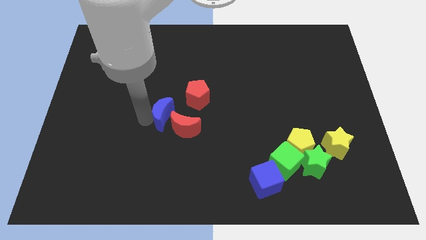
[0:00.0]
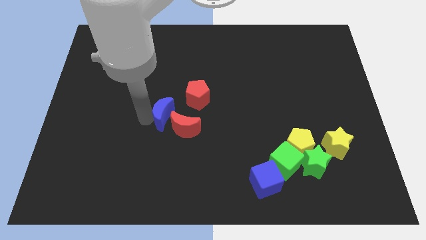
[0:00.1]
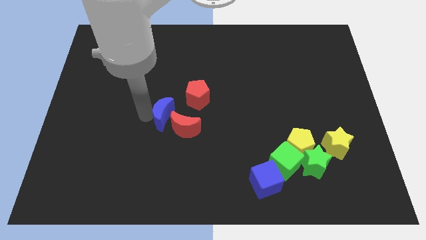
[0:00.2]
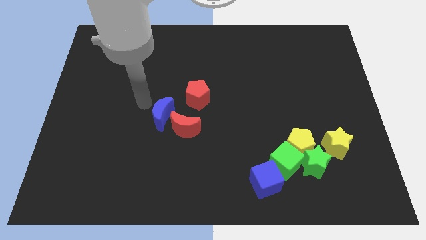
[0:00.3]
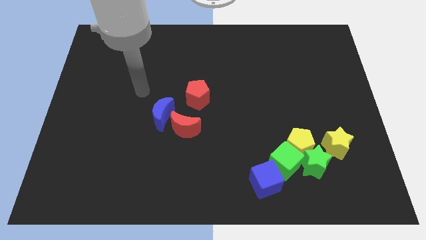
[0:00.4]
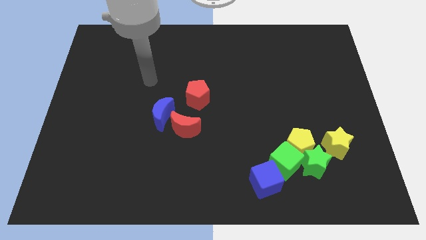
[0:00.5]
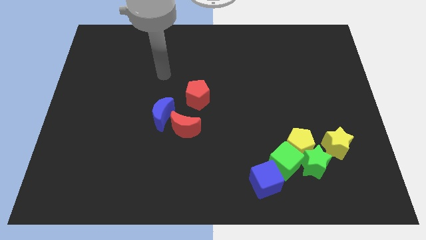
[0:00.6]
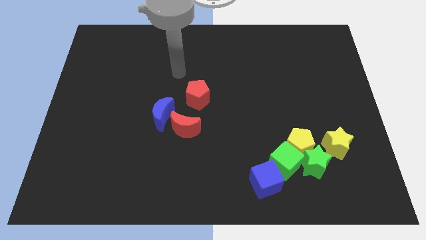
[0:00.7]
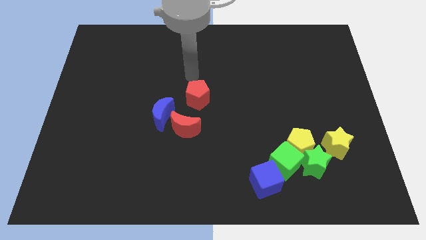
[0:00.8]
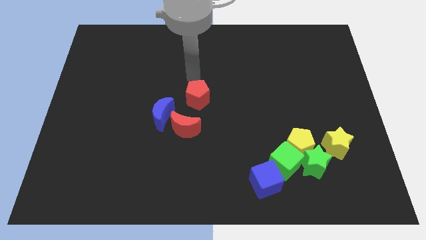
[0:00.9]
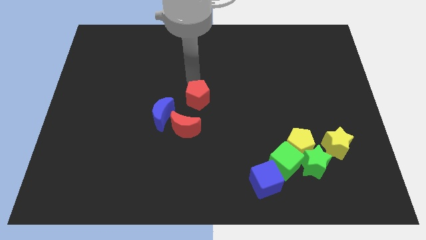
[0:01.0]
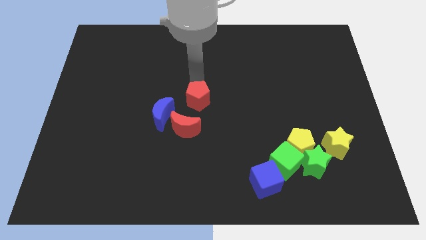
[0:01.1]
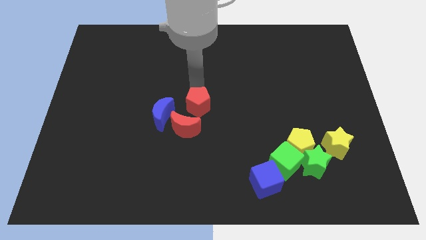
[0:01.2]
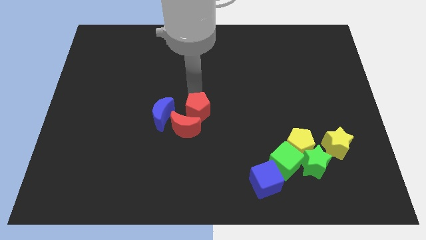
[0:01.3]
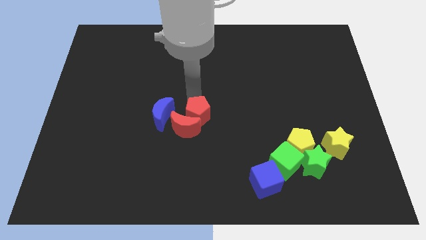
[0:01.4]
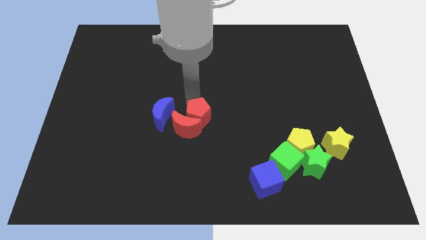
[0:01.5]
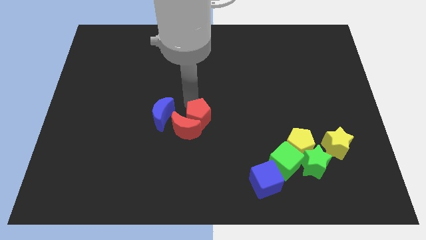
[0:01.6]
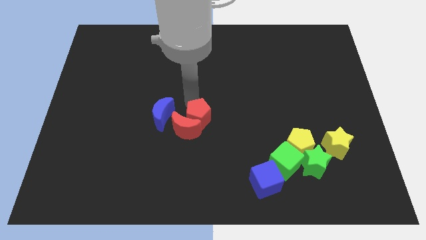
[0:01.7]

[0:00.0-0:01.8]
push the red pentagon into the red crescent

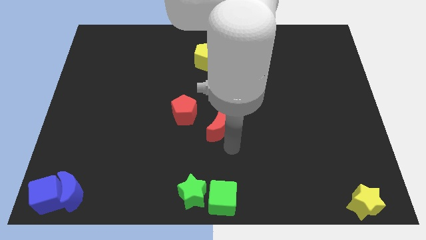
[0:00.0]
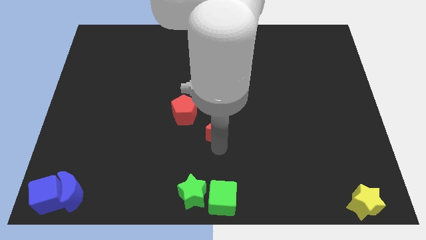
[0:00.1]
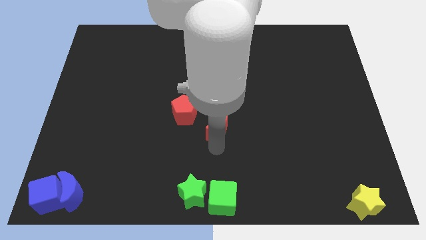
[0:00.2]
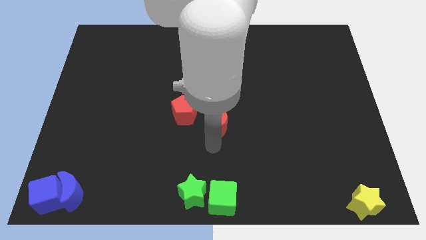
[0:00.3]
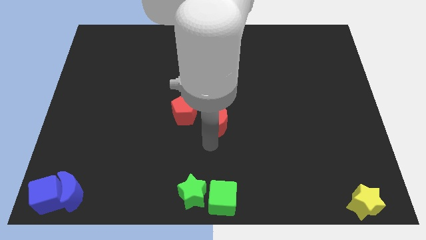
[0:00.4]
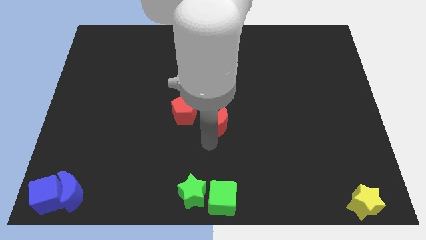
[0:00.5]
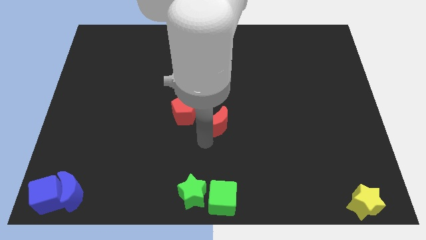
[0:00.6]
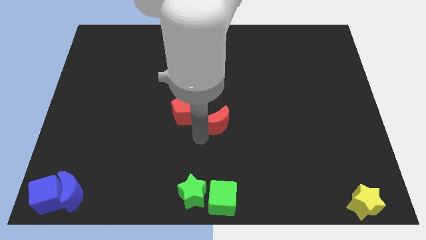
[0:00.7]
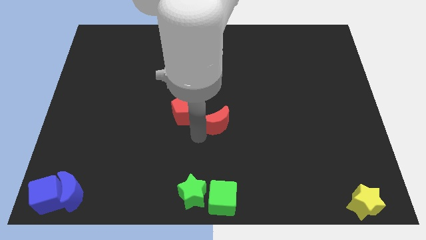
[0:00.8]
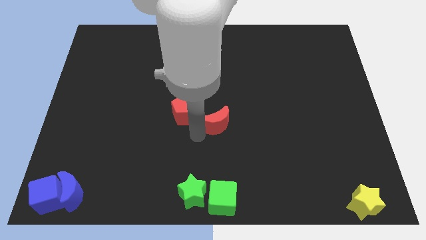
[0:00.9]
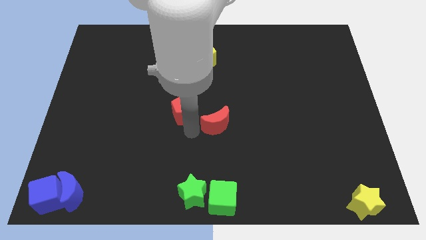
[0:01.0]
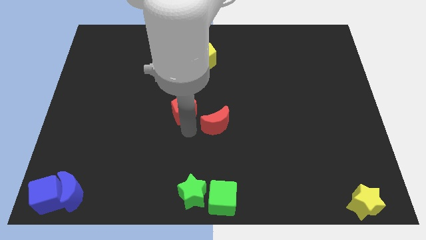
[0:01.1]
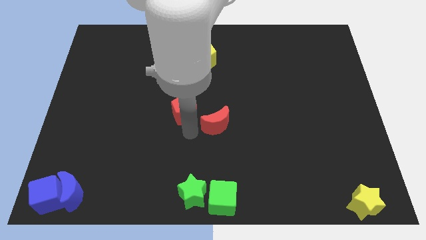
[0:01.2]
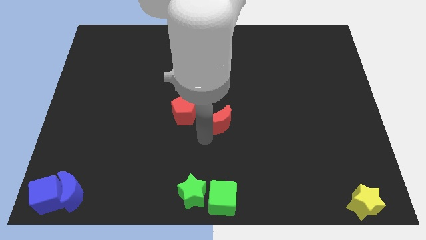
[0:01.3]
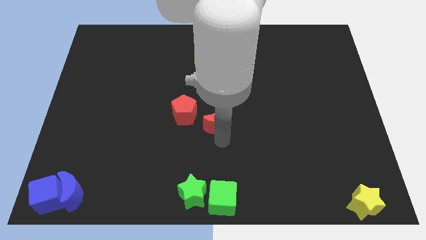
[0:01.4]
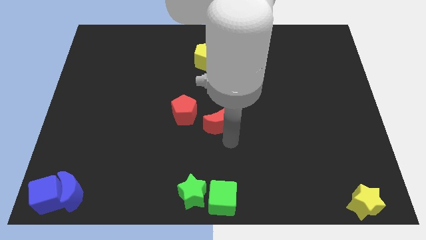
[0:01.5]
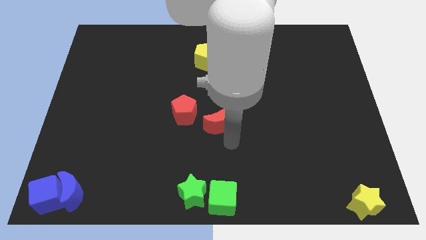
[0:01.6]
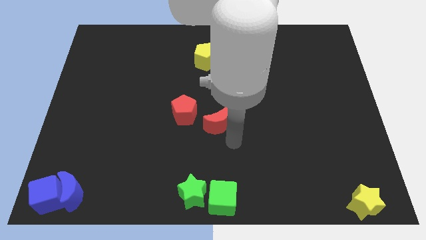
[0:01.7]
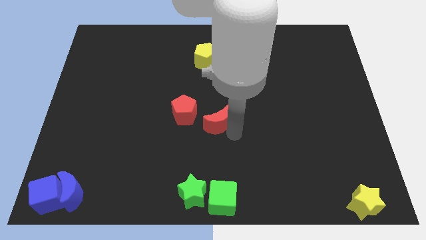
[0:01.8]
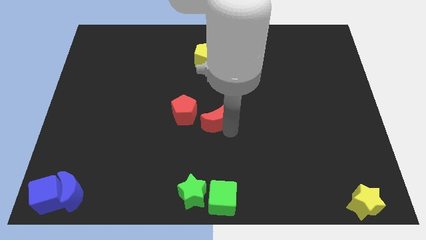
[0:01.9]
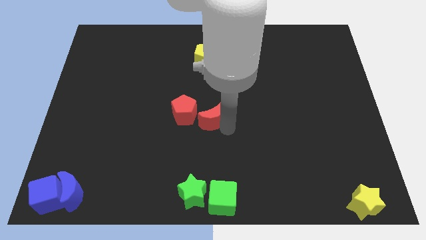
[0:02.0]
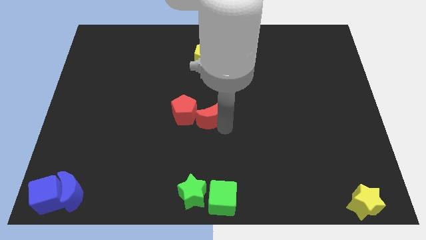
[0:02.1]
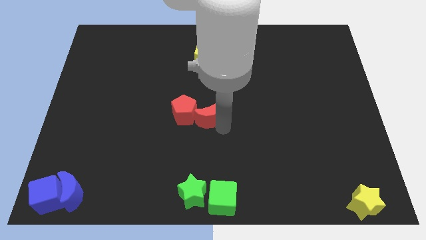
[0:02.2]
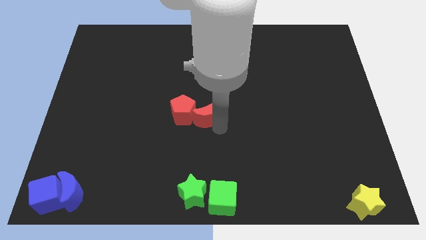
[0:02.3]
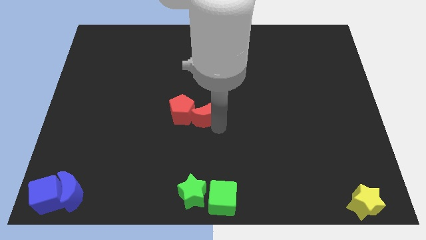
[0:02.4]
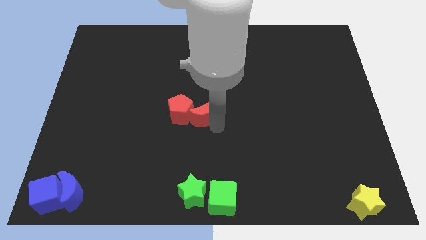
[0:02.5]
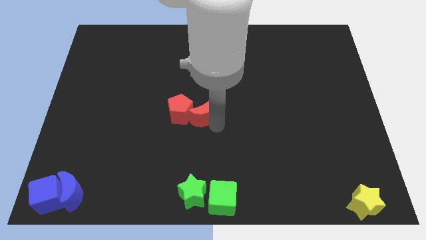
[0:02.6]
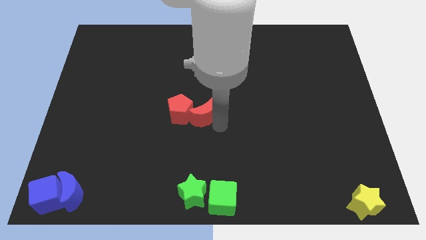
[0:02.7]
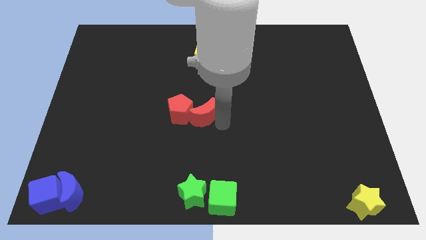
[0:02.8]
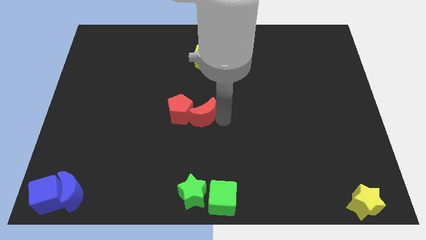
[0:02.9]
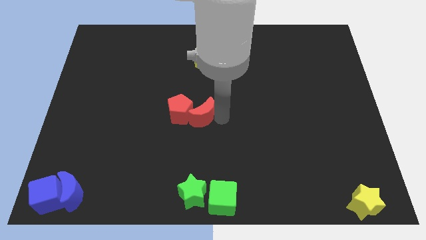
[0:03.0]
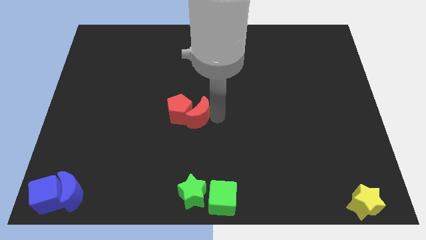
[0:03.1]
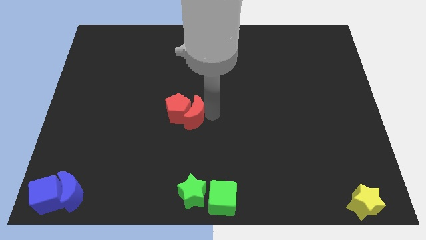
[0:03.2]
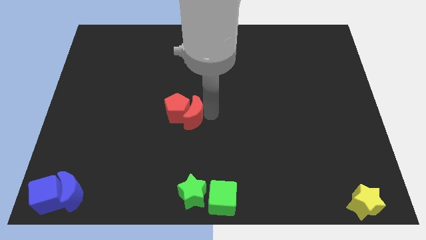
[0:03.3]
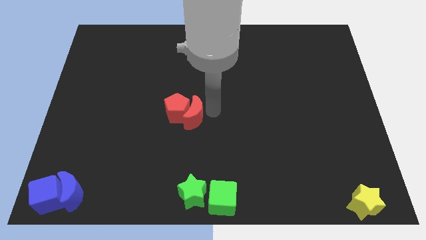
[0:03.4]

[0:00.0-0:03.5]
push red crescent above green star

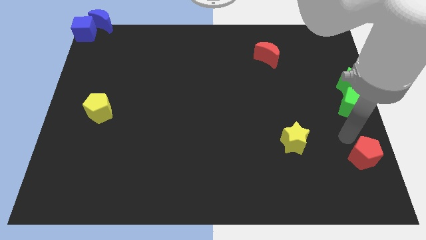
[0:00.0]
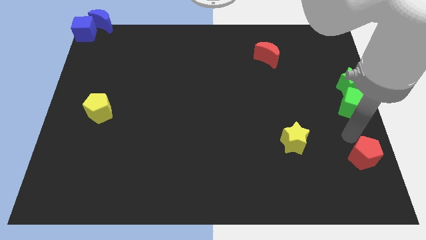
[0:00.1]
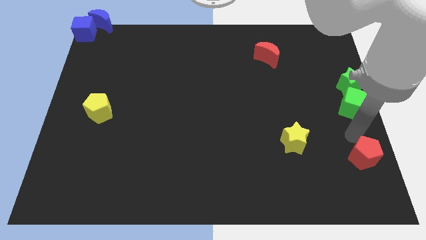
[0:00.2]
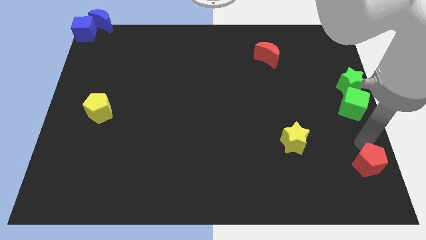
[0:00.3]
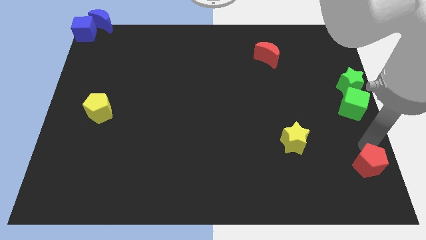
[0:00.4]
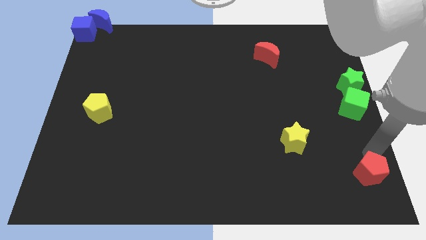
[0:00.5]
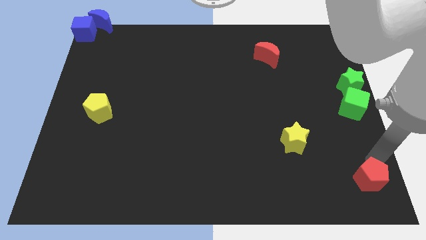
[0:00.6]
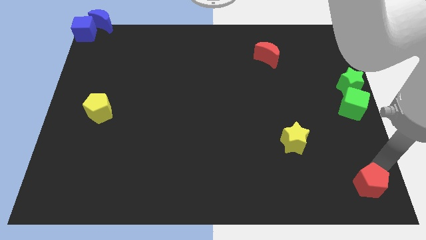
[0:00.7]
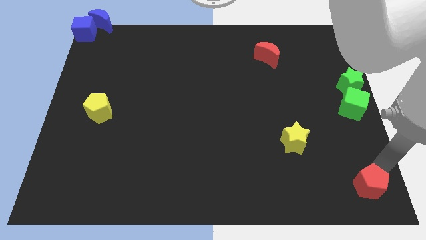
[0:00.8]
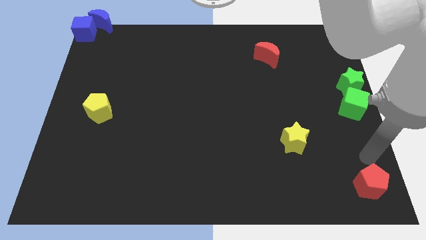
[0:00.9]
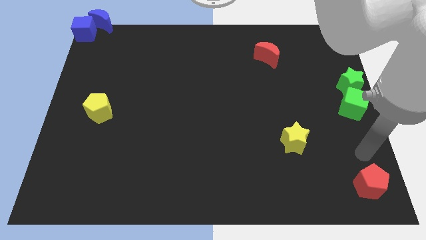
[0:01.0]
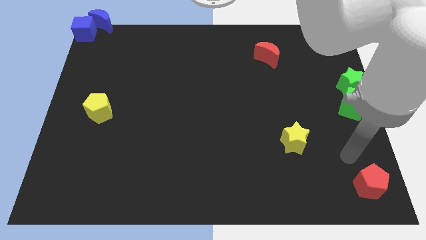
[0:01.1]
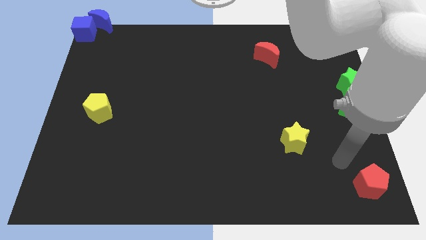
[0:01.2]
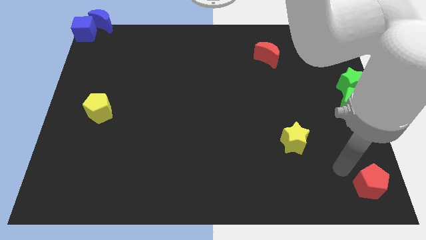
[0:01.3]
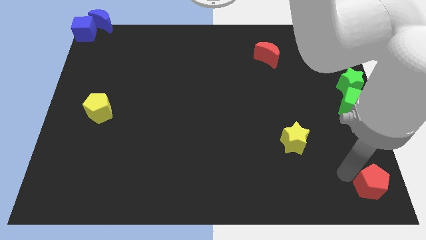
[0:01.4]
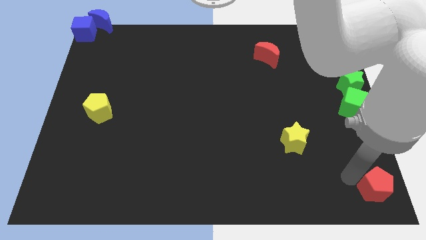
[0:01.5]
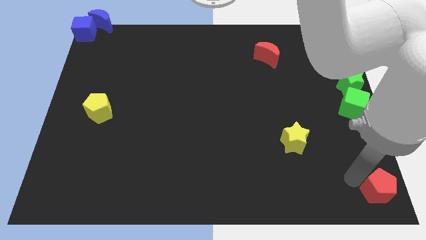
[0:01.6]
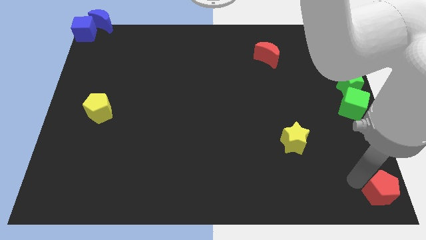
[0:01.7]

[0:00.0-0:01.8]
move the red pentagon to the bottom right of the board

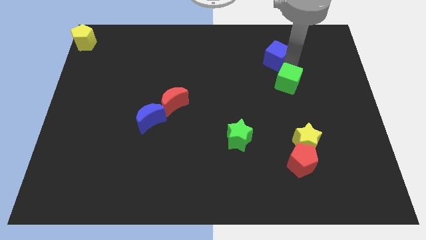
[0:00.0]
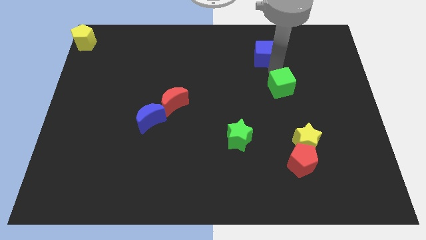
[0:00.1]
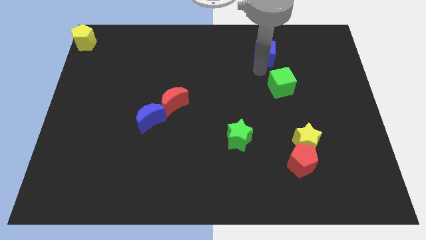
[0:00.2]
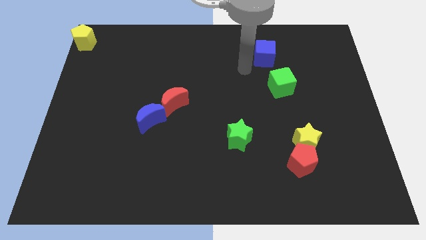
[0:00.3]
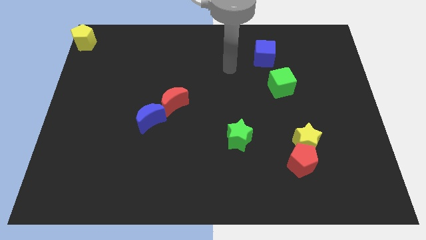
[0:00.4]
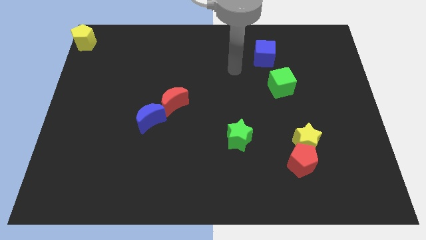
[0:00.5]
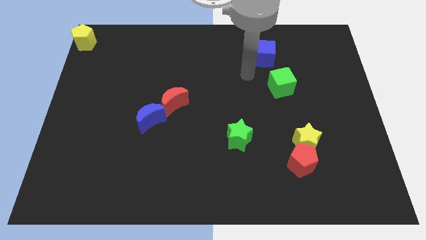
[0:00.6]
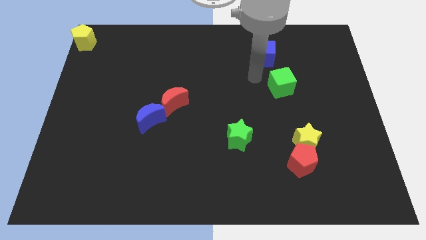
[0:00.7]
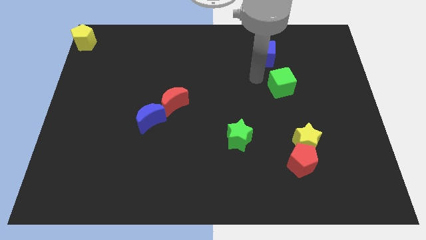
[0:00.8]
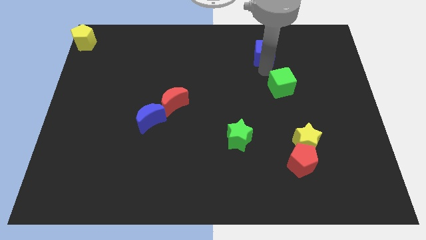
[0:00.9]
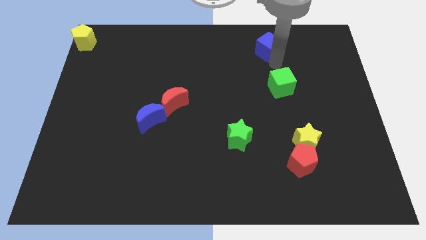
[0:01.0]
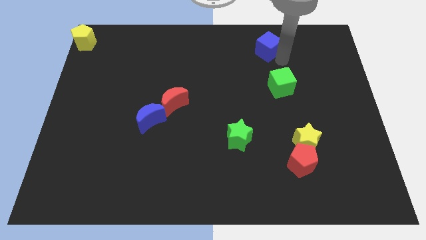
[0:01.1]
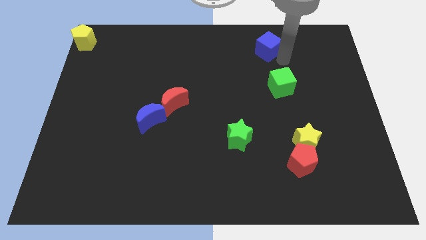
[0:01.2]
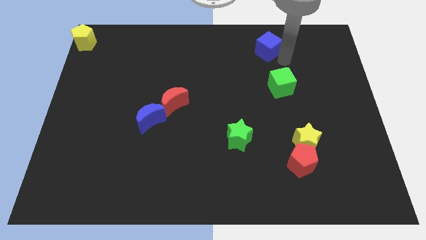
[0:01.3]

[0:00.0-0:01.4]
place your arm between green cube and blue cube

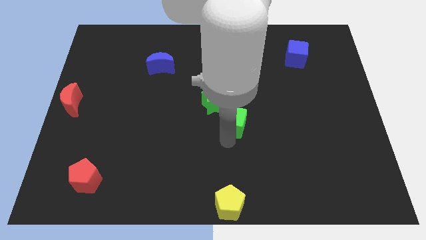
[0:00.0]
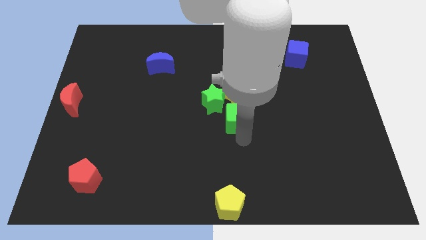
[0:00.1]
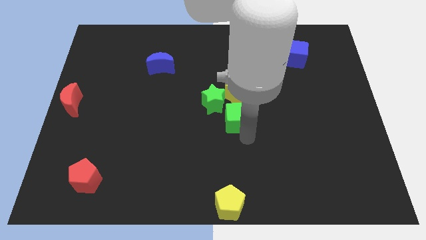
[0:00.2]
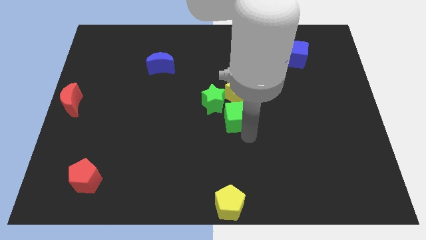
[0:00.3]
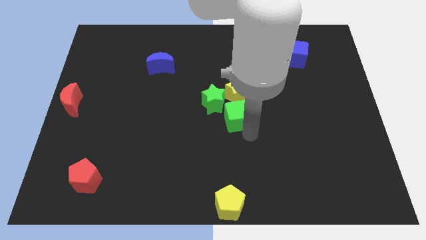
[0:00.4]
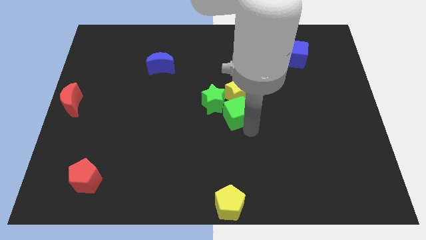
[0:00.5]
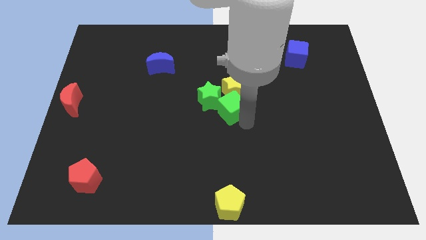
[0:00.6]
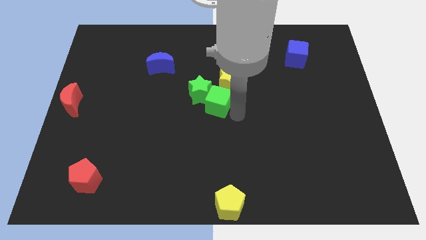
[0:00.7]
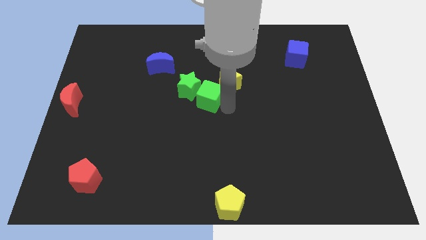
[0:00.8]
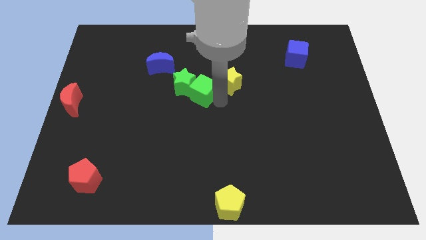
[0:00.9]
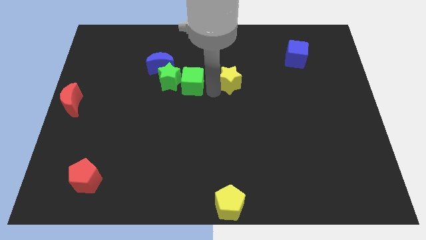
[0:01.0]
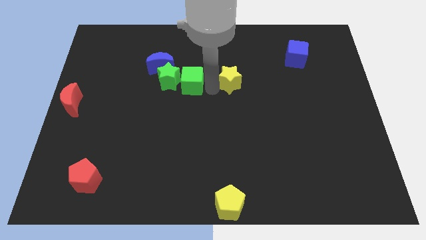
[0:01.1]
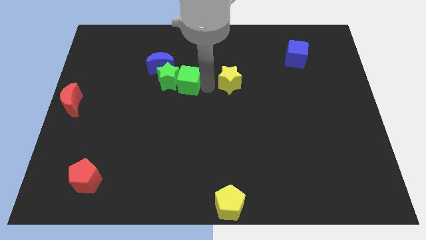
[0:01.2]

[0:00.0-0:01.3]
push the green cube into green star
